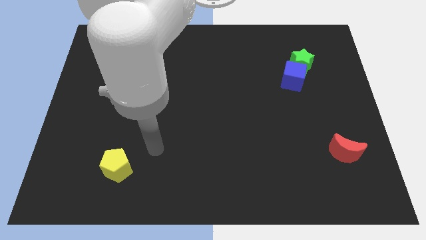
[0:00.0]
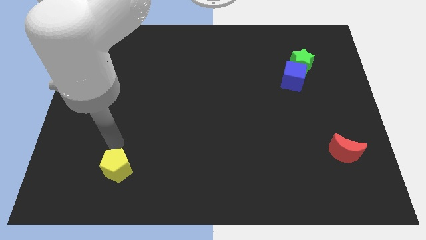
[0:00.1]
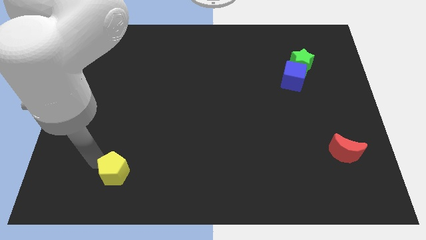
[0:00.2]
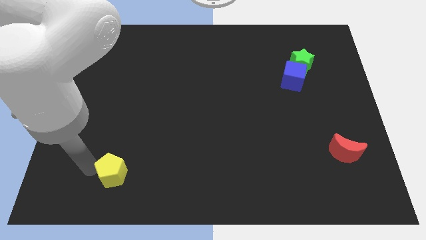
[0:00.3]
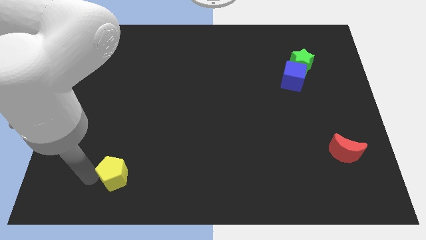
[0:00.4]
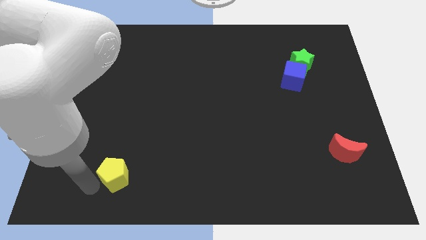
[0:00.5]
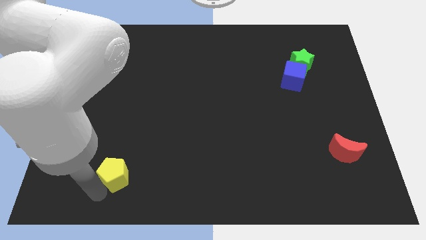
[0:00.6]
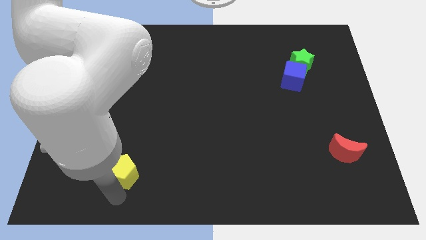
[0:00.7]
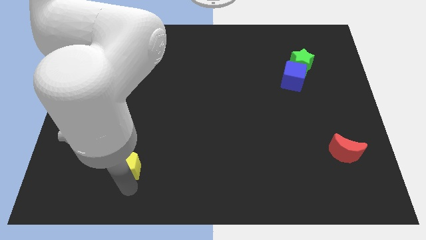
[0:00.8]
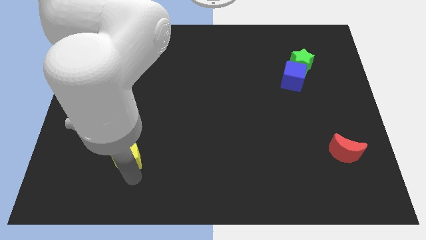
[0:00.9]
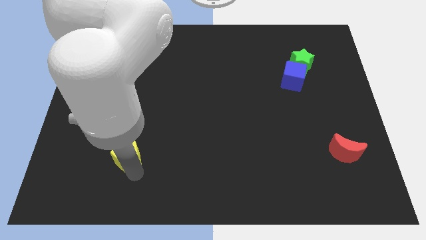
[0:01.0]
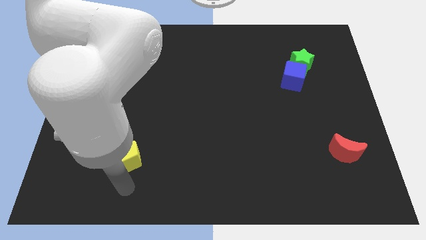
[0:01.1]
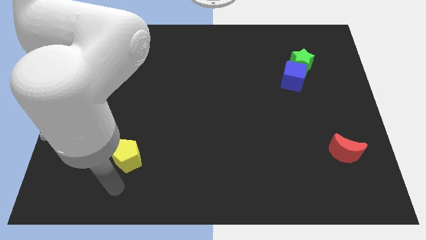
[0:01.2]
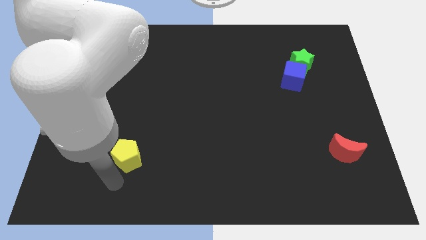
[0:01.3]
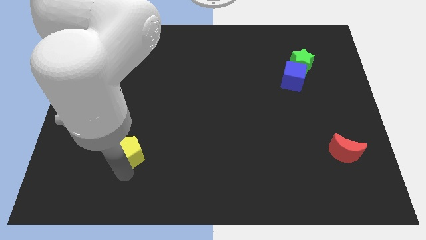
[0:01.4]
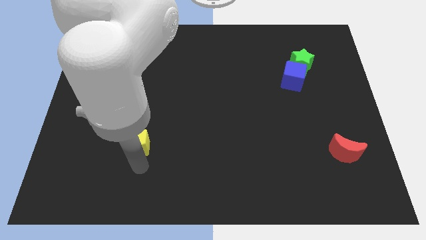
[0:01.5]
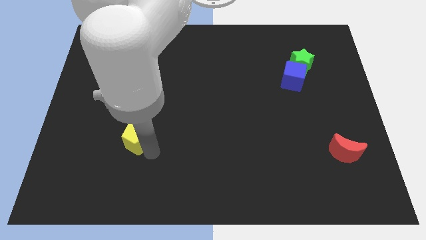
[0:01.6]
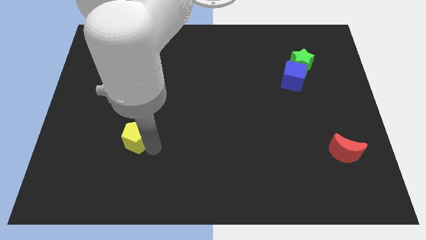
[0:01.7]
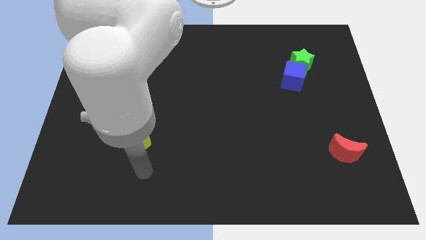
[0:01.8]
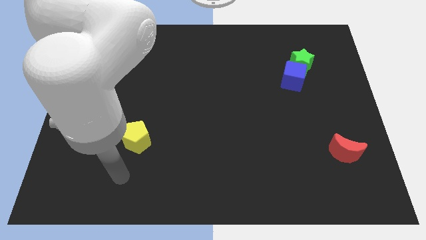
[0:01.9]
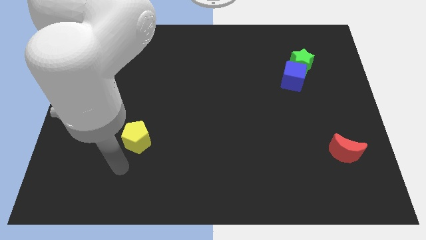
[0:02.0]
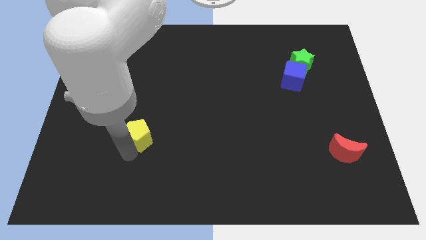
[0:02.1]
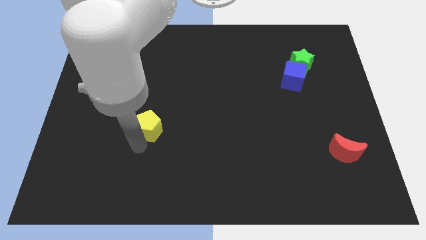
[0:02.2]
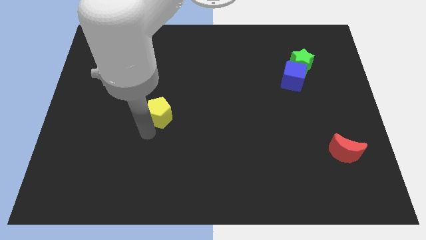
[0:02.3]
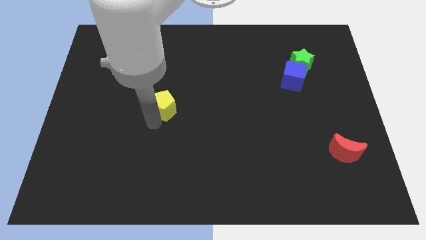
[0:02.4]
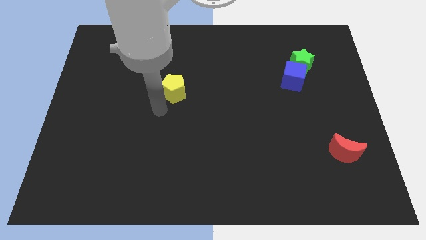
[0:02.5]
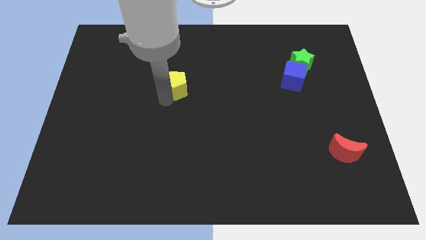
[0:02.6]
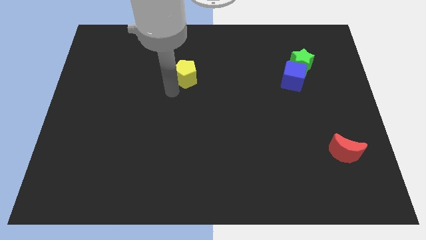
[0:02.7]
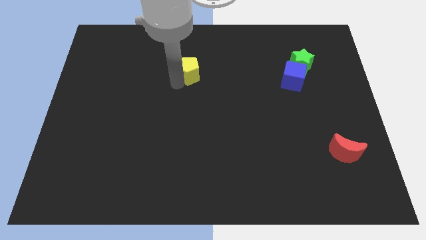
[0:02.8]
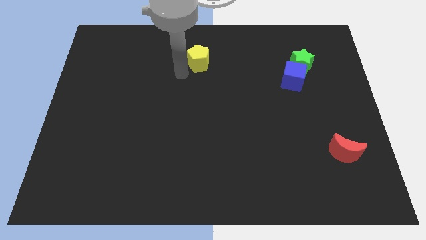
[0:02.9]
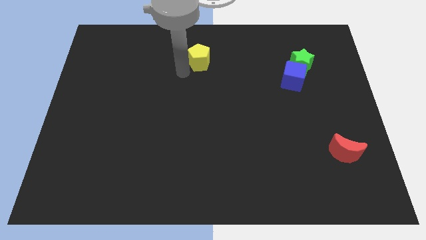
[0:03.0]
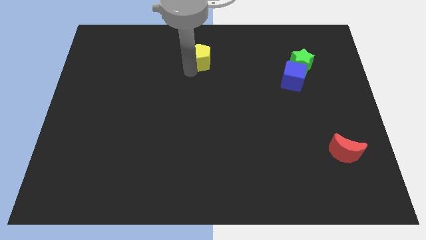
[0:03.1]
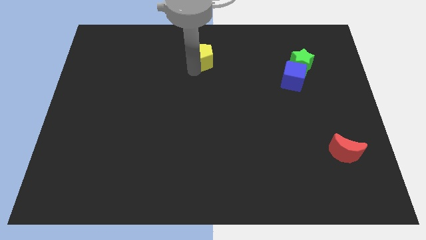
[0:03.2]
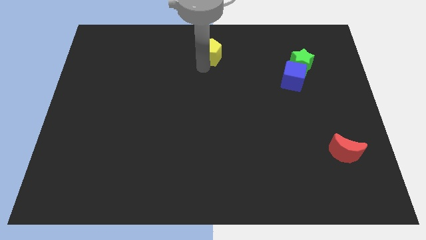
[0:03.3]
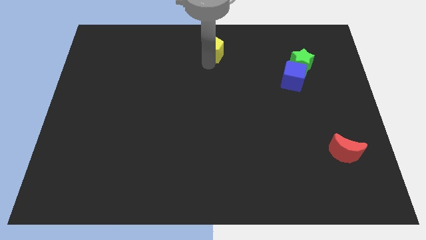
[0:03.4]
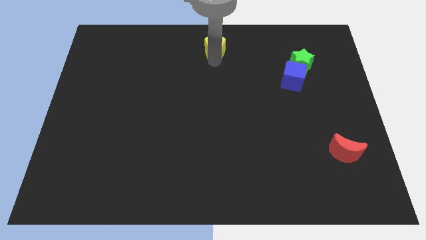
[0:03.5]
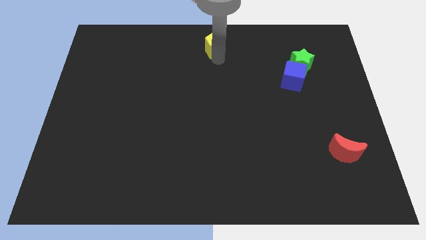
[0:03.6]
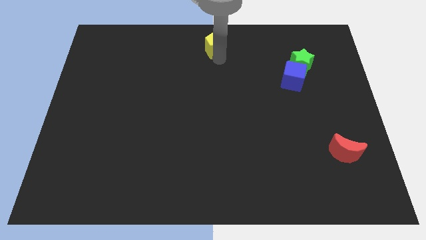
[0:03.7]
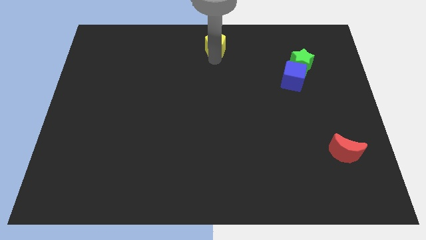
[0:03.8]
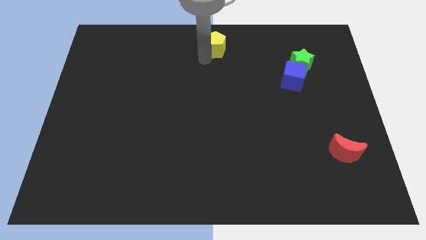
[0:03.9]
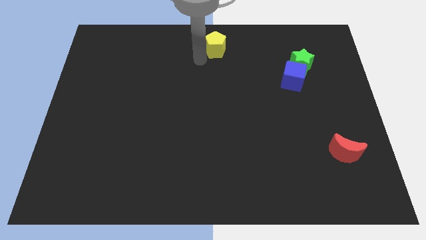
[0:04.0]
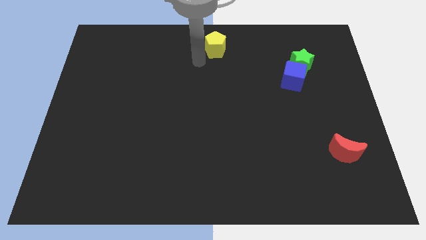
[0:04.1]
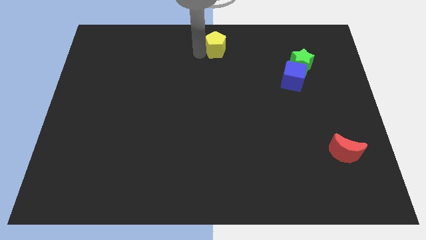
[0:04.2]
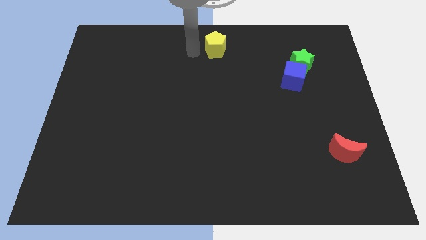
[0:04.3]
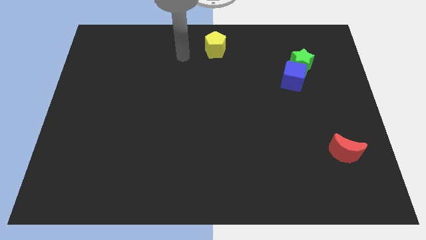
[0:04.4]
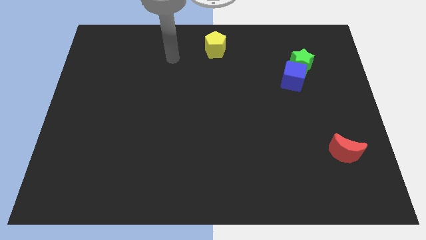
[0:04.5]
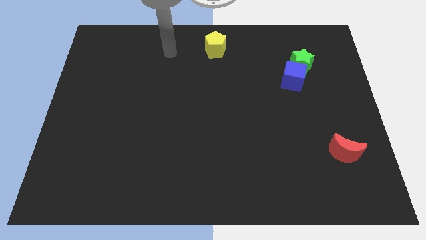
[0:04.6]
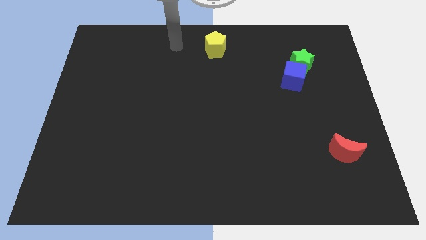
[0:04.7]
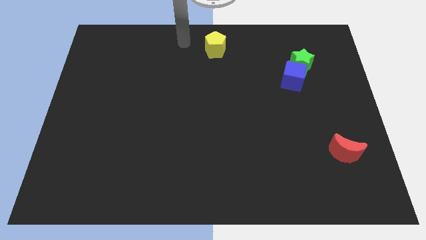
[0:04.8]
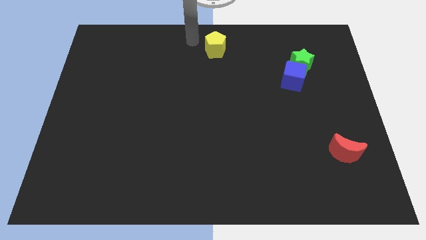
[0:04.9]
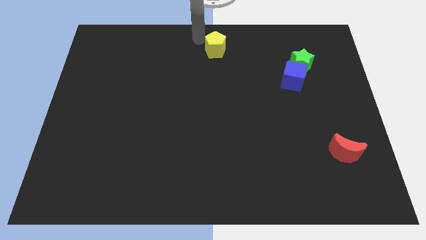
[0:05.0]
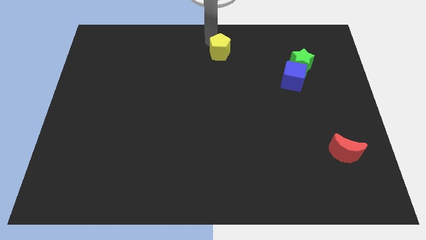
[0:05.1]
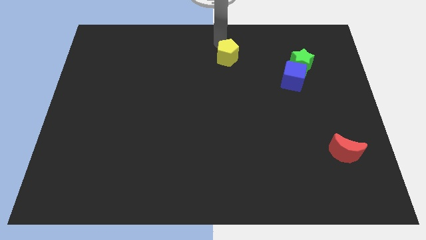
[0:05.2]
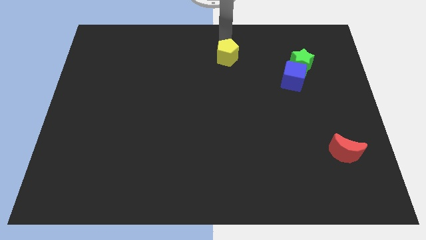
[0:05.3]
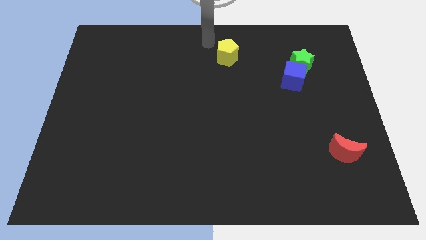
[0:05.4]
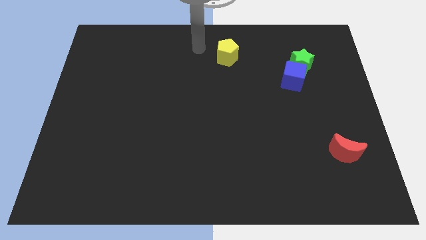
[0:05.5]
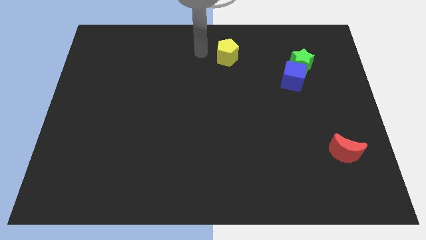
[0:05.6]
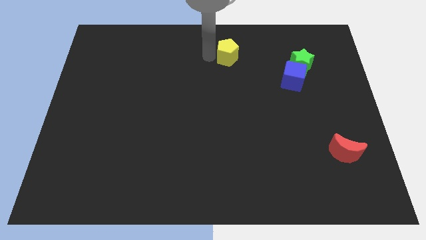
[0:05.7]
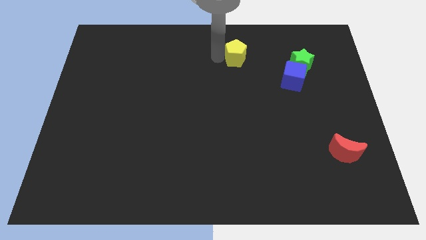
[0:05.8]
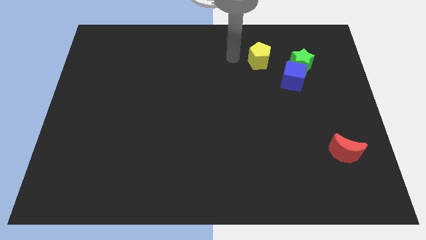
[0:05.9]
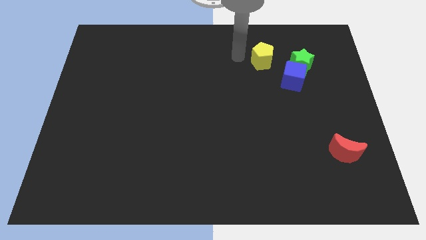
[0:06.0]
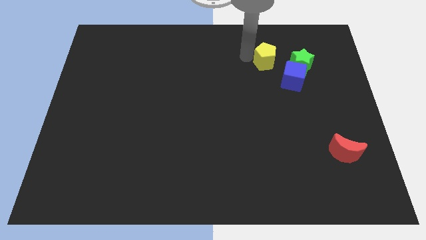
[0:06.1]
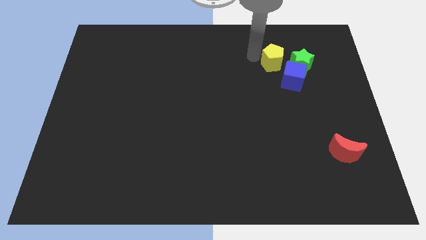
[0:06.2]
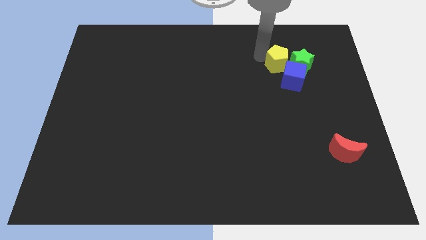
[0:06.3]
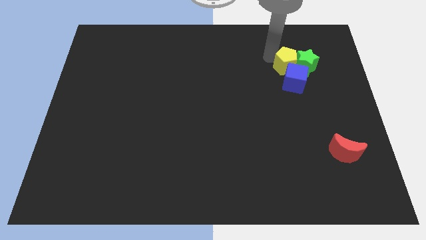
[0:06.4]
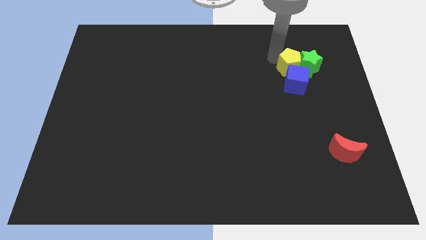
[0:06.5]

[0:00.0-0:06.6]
put the yellow pentagon close to the green block

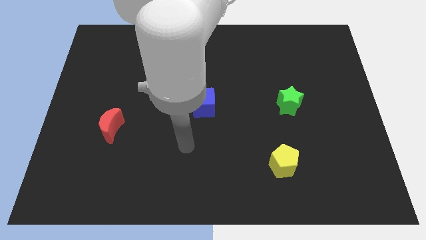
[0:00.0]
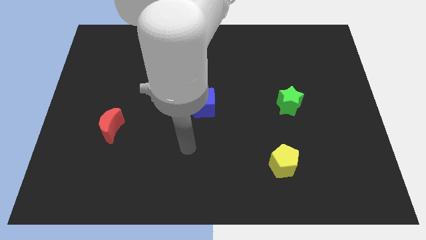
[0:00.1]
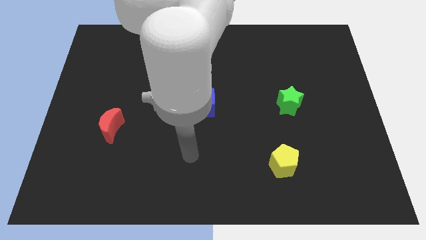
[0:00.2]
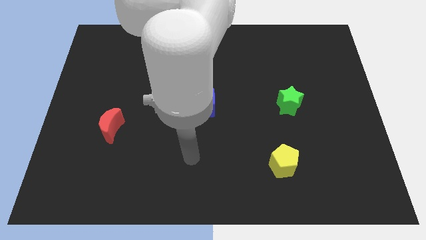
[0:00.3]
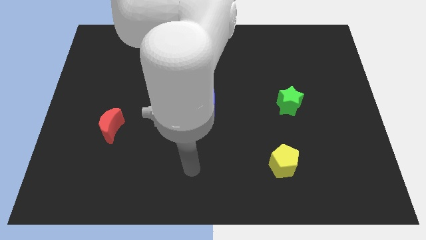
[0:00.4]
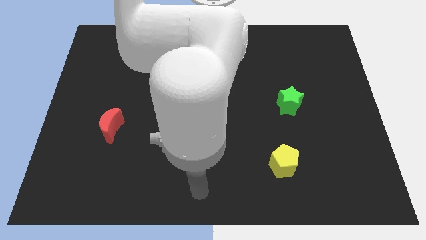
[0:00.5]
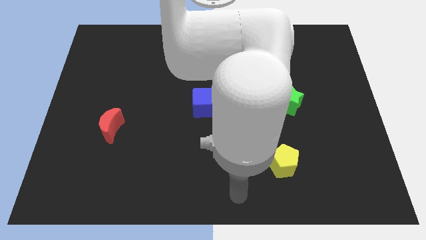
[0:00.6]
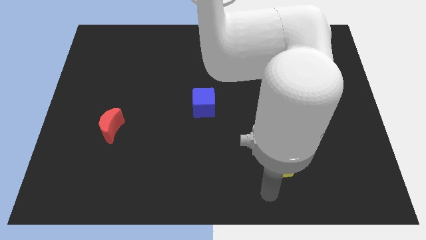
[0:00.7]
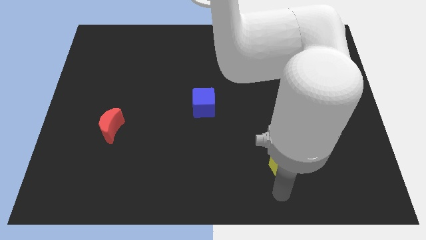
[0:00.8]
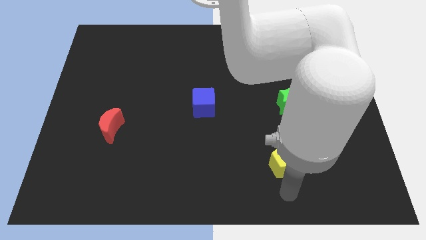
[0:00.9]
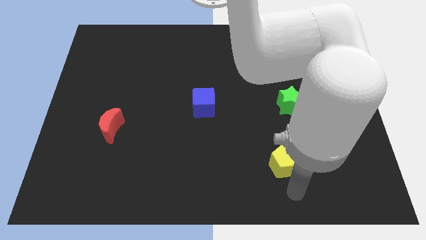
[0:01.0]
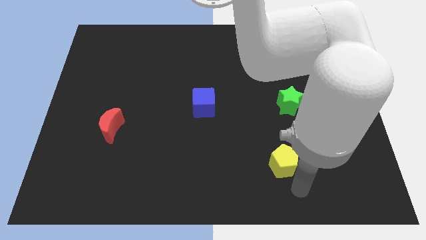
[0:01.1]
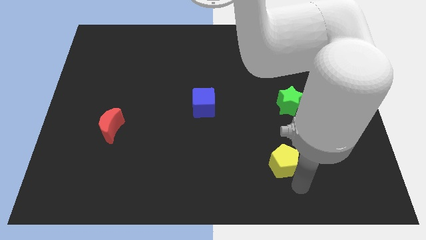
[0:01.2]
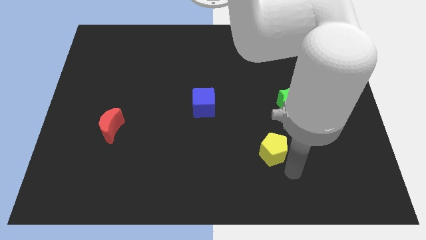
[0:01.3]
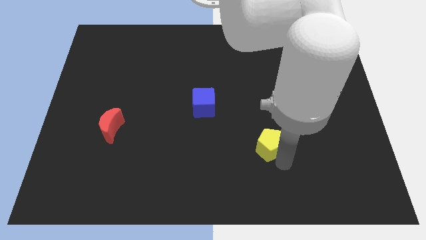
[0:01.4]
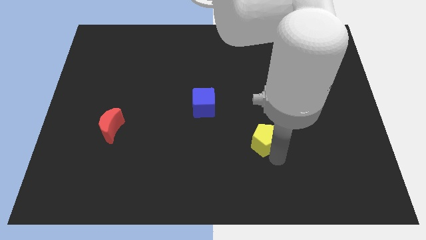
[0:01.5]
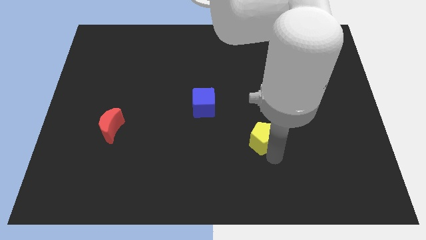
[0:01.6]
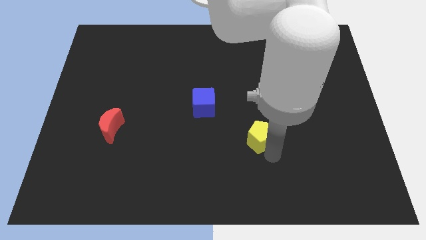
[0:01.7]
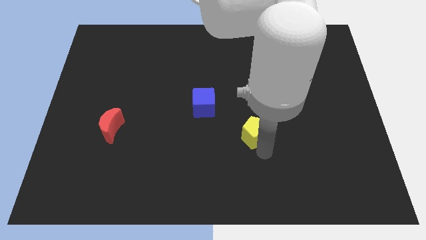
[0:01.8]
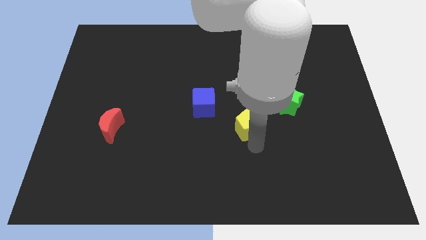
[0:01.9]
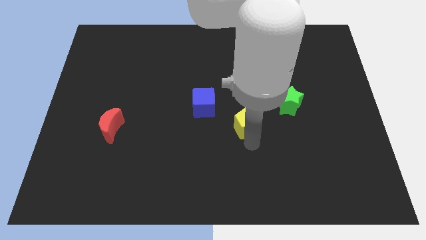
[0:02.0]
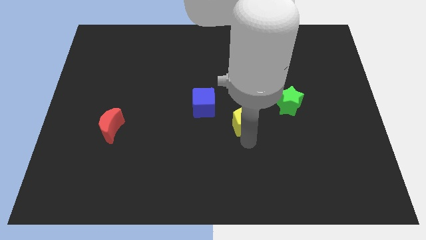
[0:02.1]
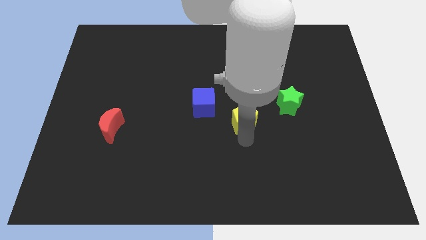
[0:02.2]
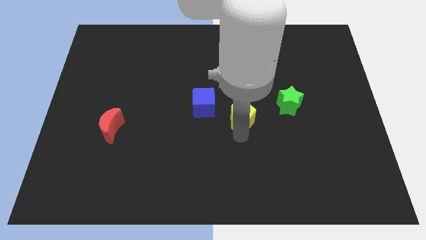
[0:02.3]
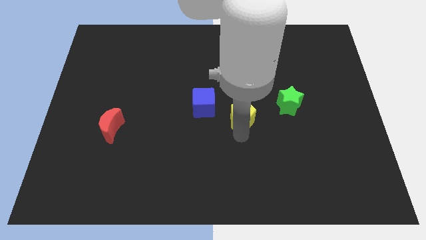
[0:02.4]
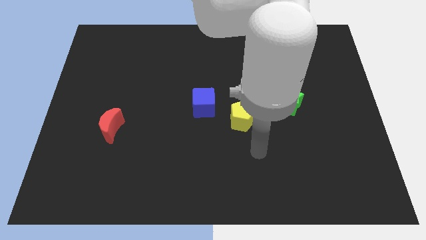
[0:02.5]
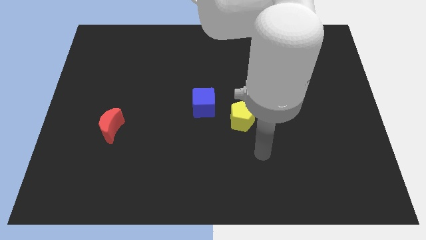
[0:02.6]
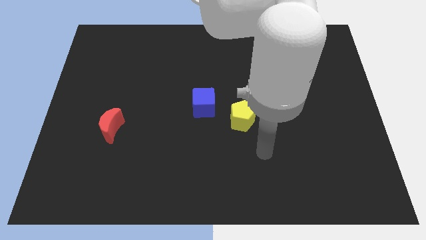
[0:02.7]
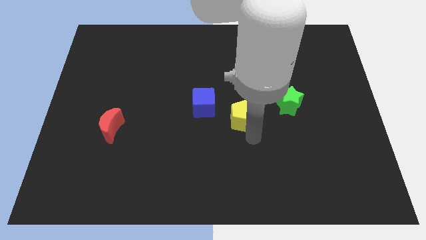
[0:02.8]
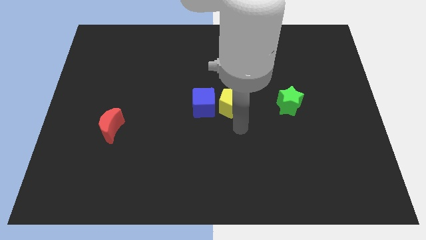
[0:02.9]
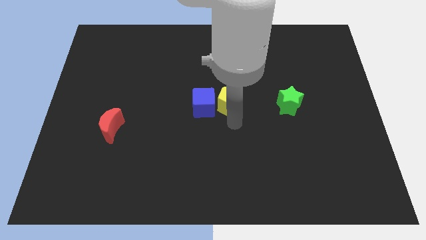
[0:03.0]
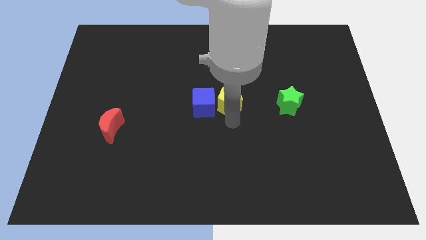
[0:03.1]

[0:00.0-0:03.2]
move the pentagon next to the blue cube
